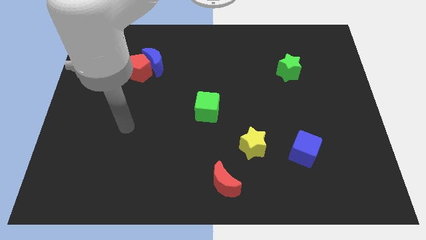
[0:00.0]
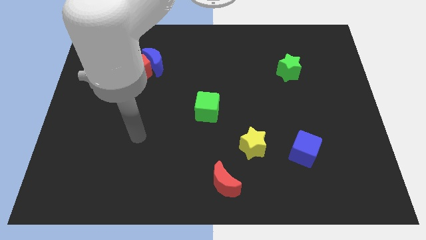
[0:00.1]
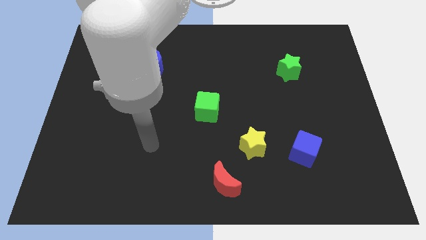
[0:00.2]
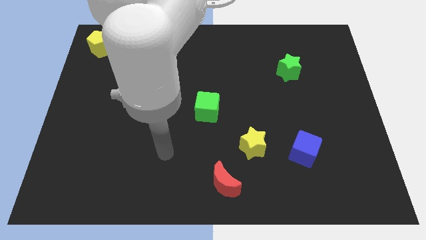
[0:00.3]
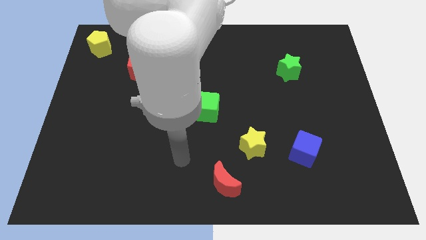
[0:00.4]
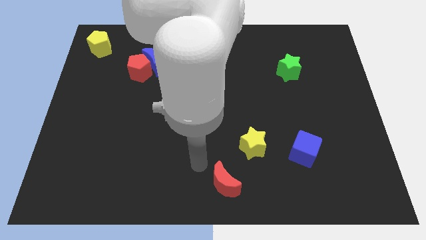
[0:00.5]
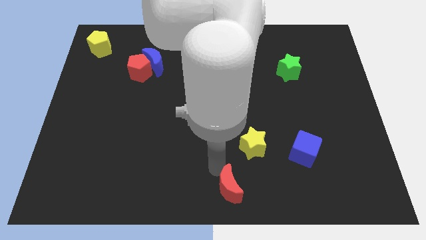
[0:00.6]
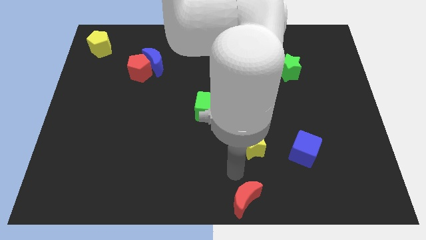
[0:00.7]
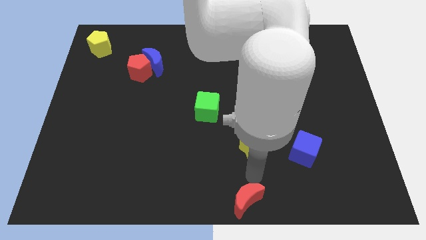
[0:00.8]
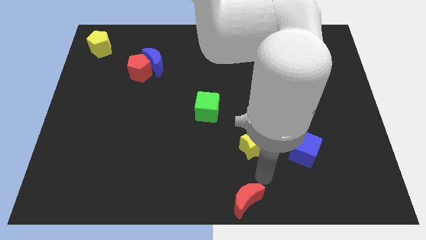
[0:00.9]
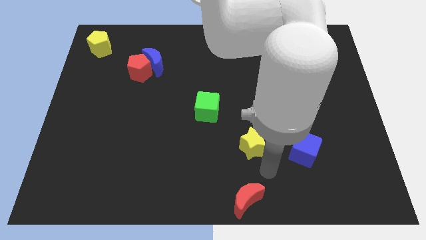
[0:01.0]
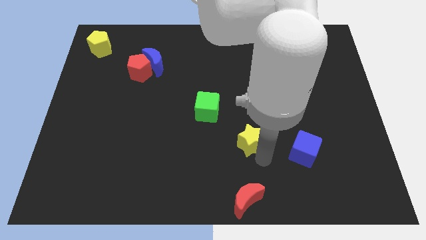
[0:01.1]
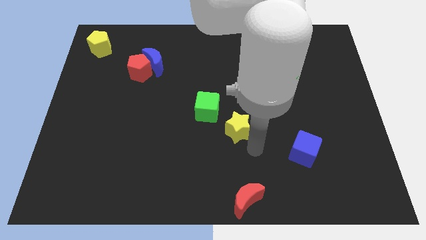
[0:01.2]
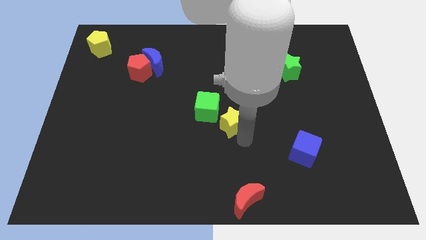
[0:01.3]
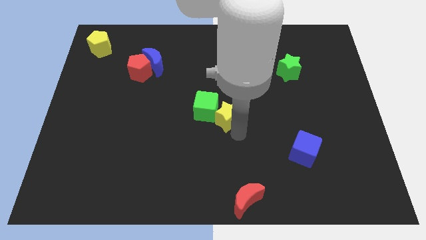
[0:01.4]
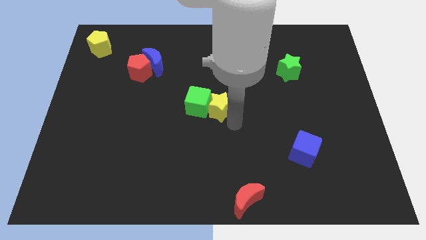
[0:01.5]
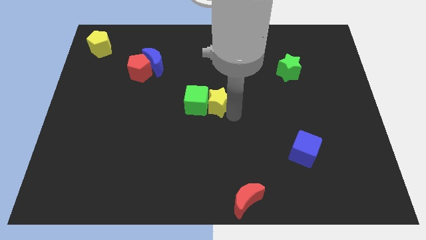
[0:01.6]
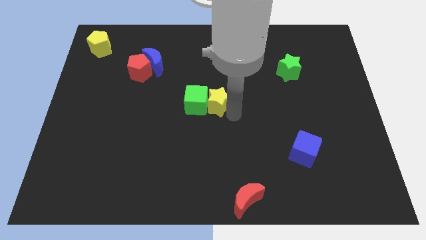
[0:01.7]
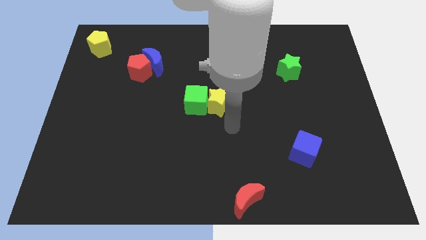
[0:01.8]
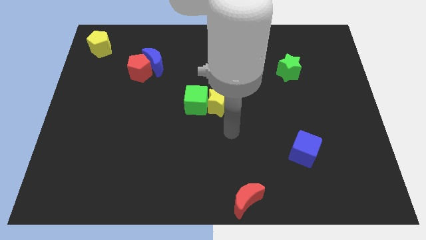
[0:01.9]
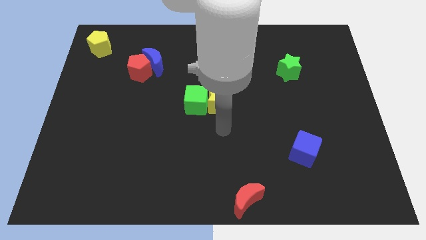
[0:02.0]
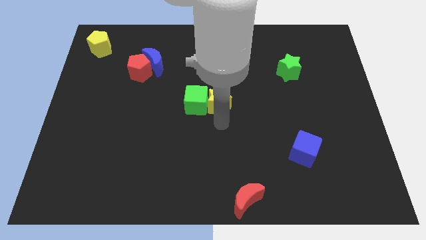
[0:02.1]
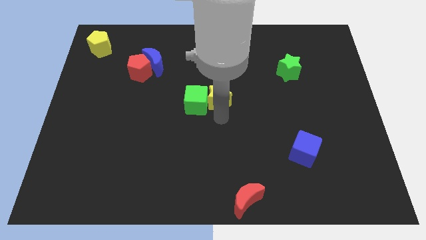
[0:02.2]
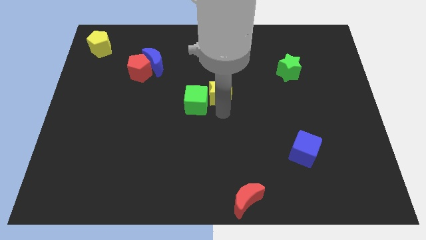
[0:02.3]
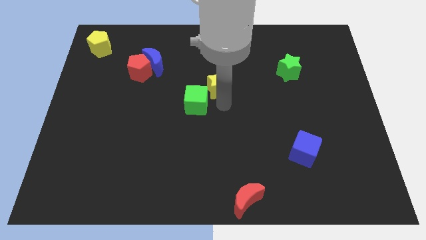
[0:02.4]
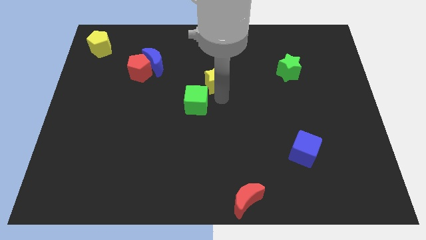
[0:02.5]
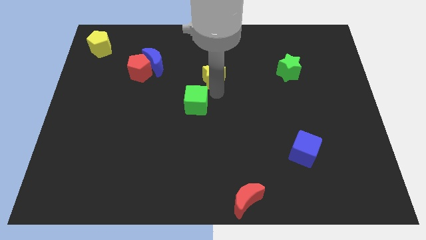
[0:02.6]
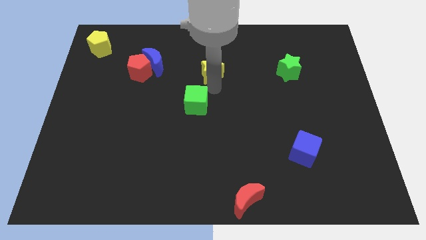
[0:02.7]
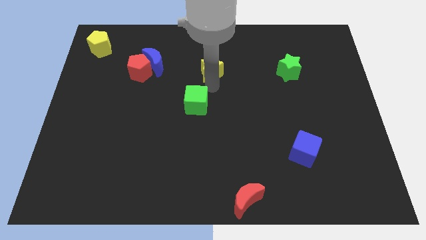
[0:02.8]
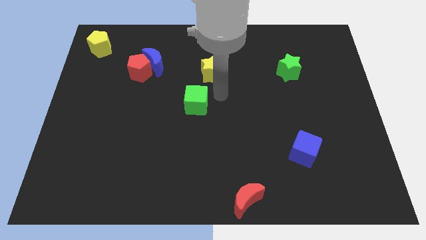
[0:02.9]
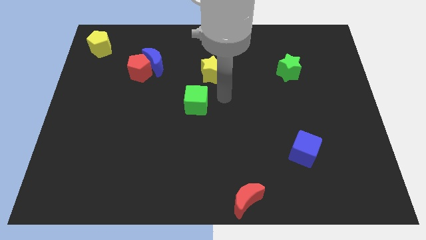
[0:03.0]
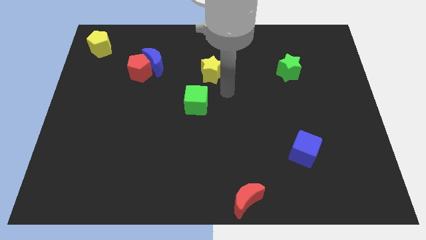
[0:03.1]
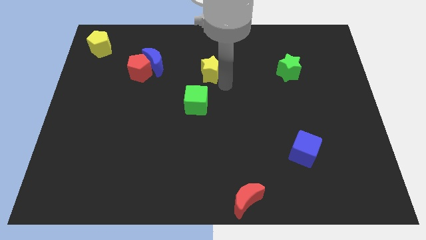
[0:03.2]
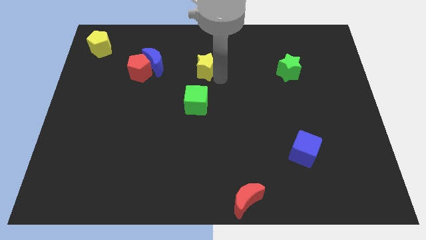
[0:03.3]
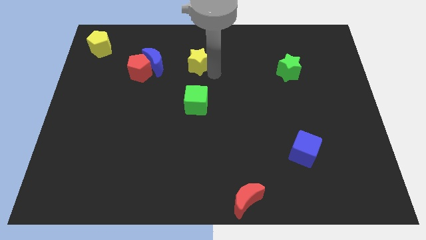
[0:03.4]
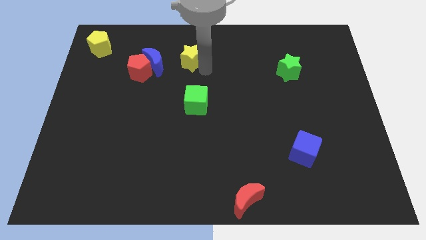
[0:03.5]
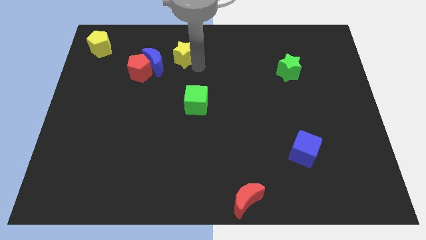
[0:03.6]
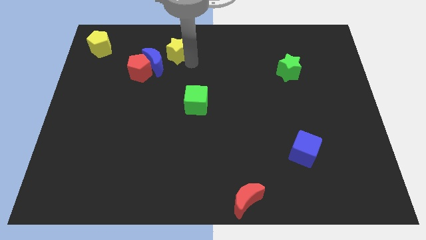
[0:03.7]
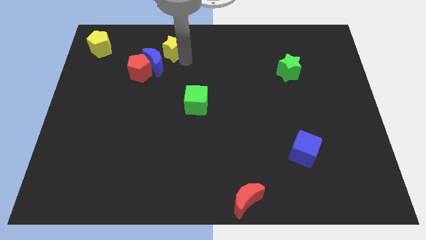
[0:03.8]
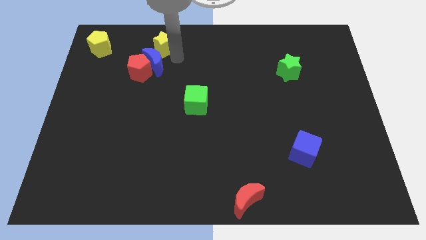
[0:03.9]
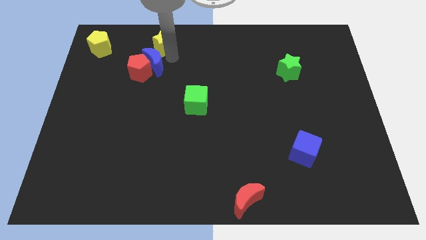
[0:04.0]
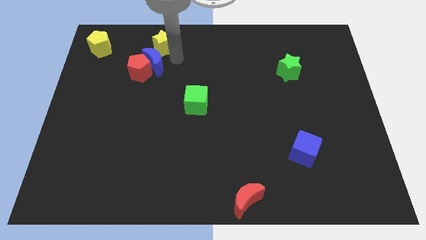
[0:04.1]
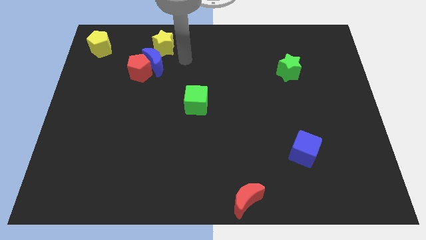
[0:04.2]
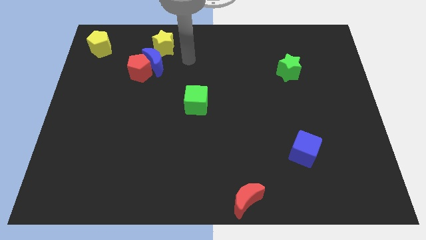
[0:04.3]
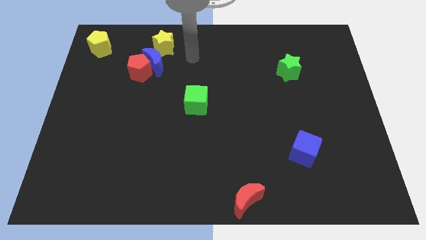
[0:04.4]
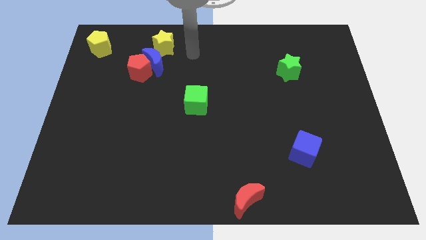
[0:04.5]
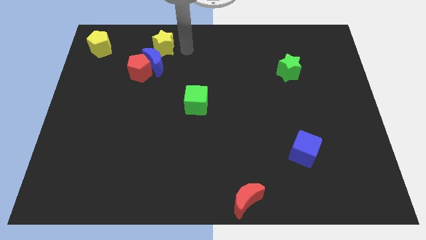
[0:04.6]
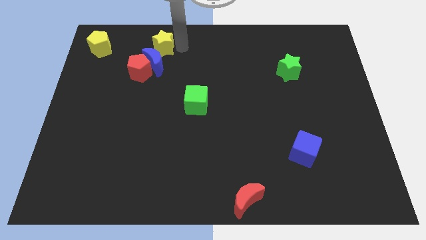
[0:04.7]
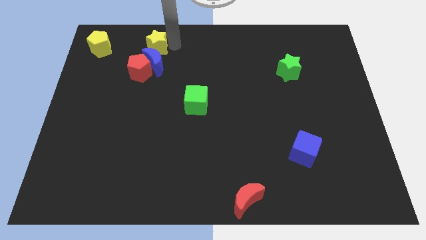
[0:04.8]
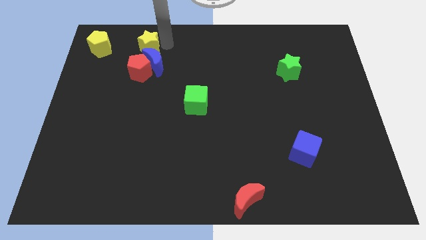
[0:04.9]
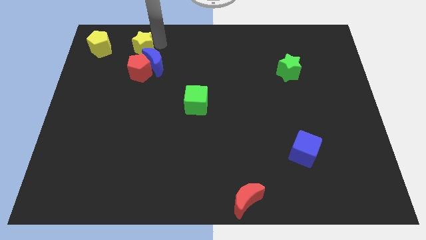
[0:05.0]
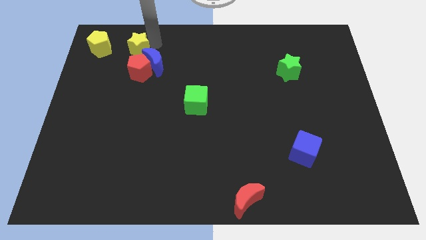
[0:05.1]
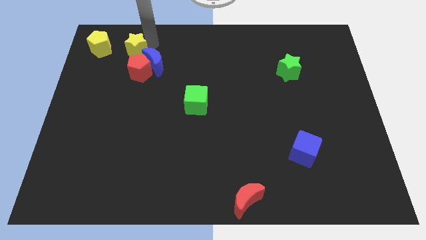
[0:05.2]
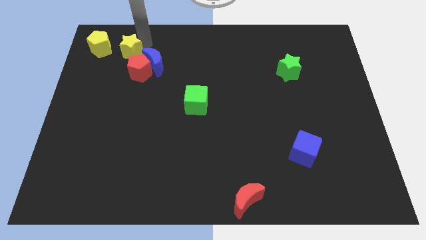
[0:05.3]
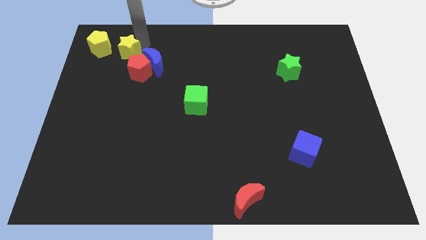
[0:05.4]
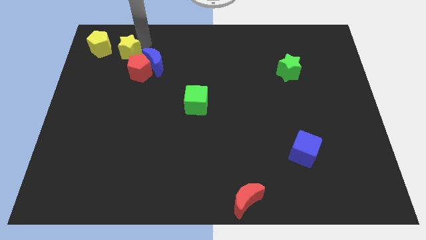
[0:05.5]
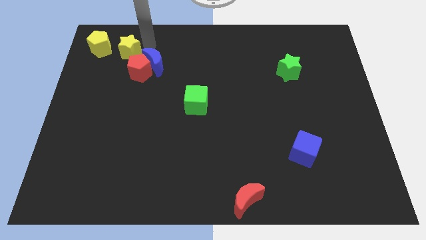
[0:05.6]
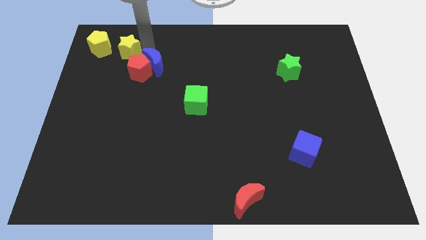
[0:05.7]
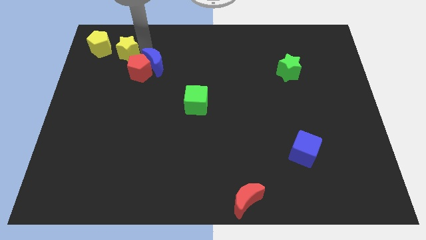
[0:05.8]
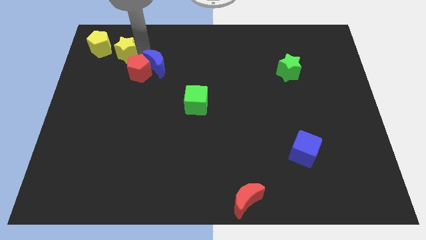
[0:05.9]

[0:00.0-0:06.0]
move yellow star right beside the yellow pentagon

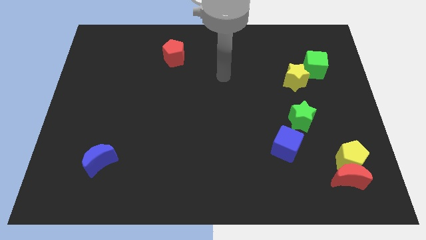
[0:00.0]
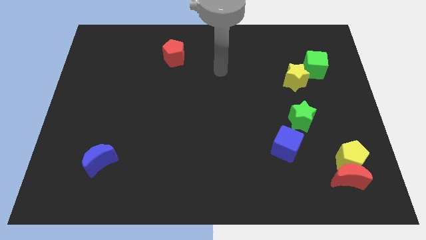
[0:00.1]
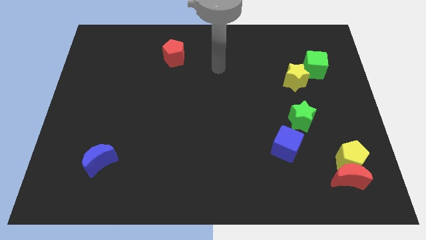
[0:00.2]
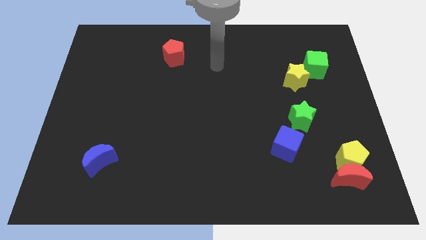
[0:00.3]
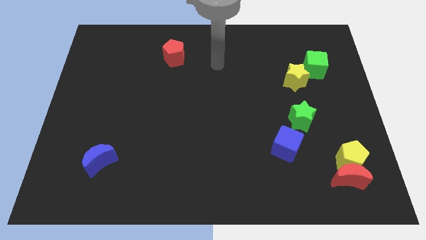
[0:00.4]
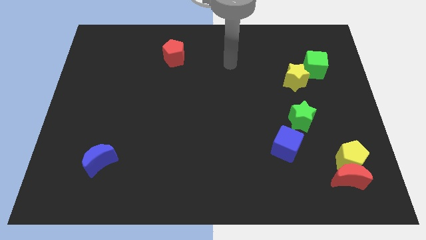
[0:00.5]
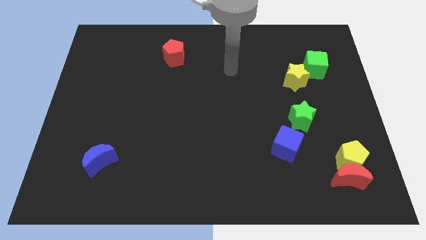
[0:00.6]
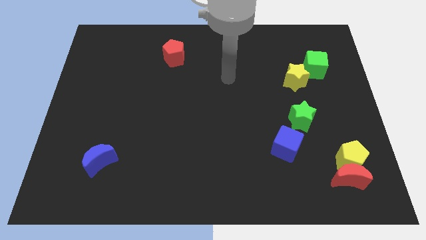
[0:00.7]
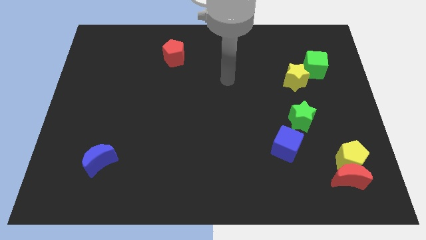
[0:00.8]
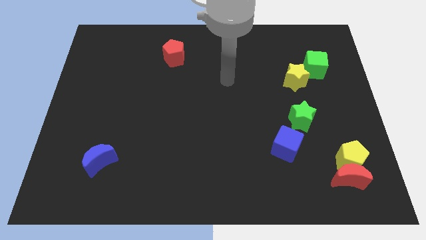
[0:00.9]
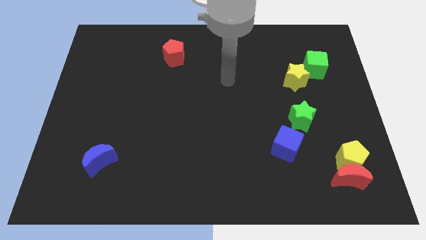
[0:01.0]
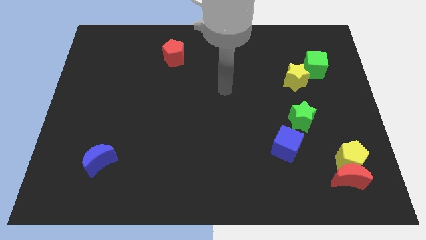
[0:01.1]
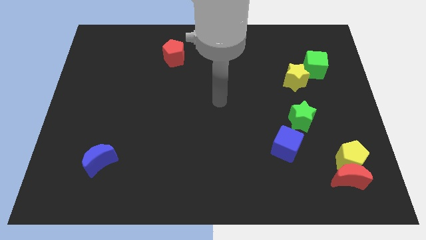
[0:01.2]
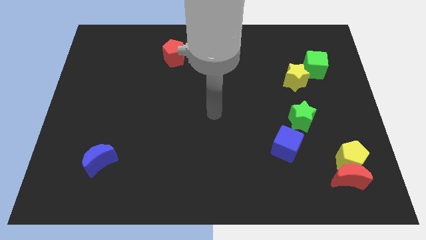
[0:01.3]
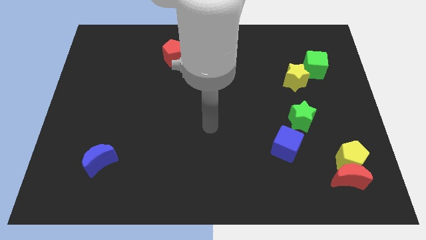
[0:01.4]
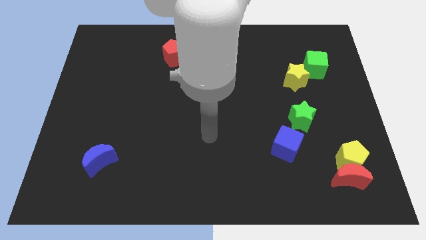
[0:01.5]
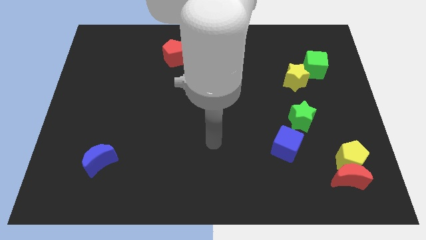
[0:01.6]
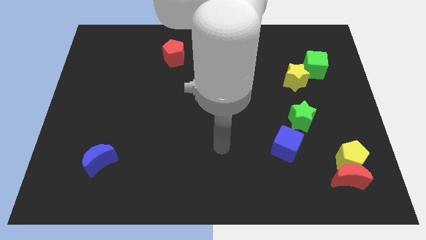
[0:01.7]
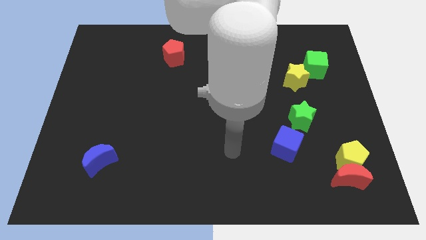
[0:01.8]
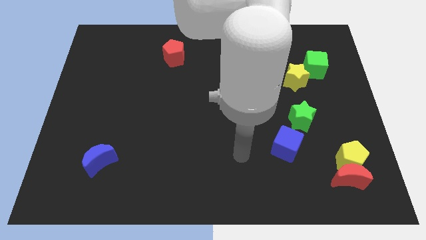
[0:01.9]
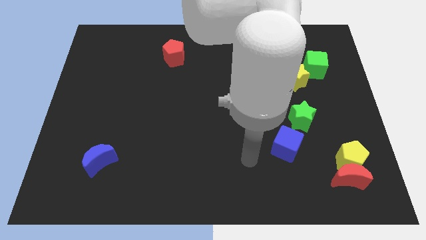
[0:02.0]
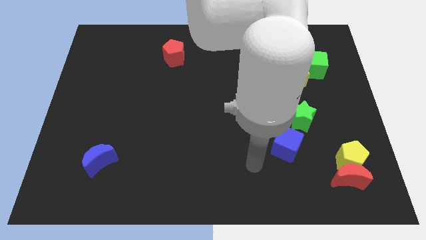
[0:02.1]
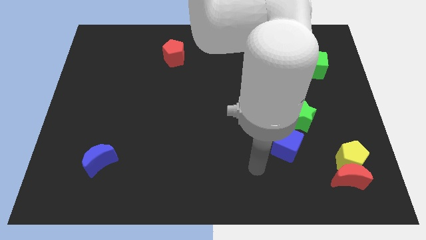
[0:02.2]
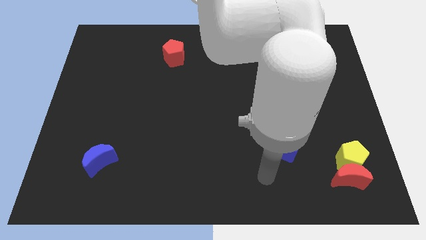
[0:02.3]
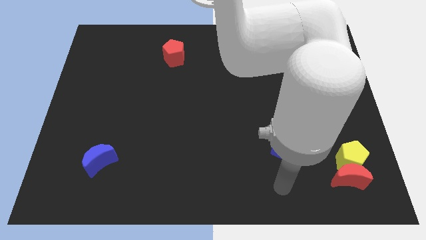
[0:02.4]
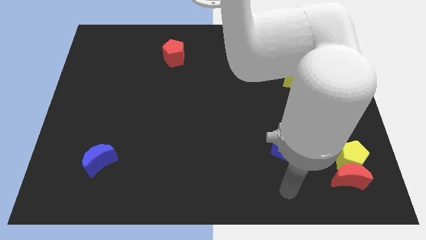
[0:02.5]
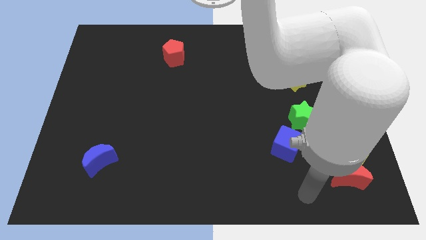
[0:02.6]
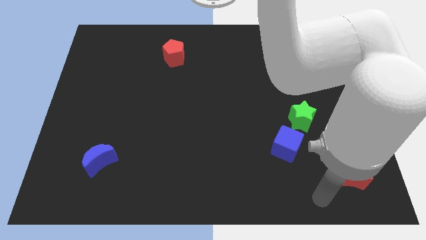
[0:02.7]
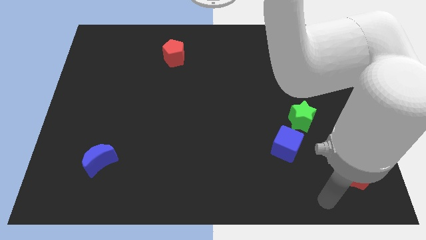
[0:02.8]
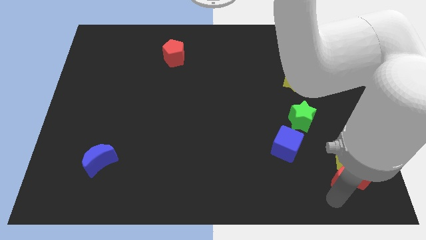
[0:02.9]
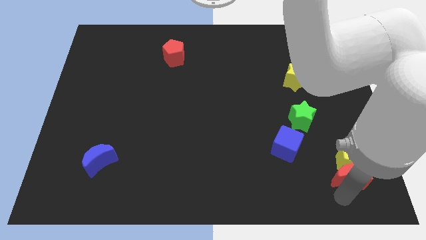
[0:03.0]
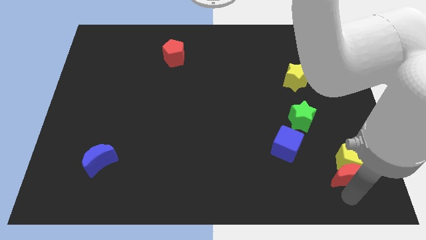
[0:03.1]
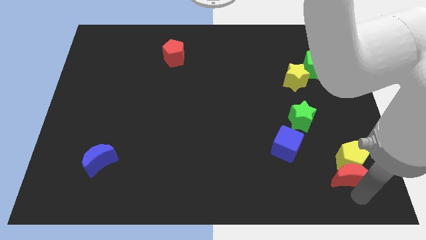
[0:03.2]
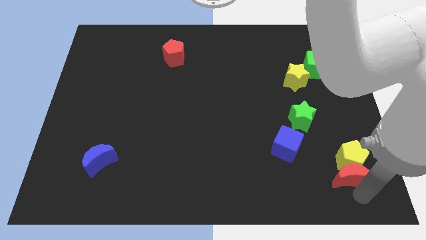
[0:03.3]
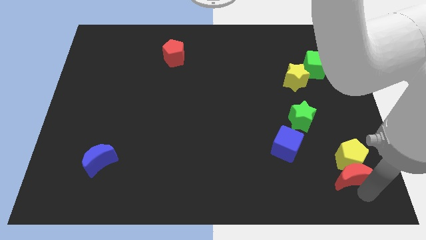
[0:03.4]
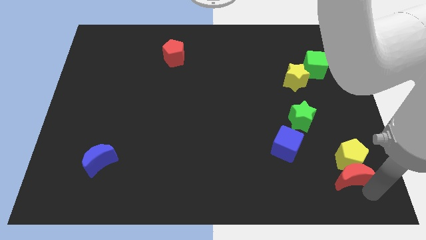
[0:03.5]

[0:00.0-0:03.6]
move your arm to the bottom right of the board
